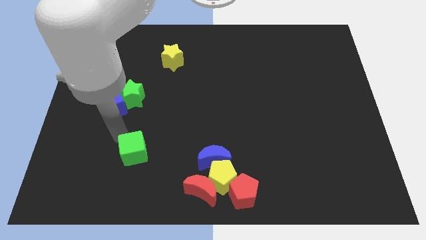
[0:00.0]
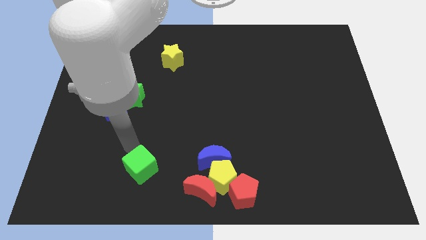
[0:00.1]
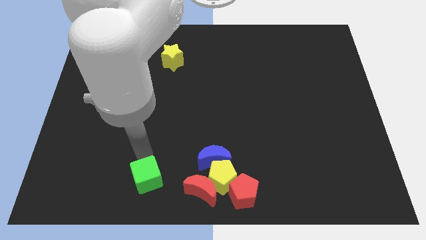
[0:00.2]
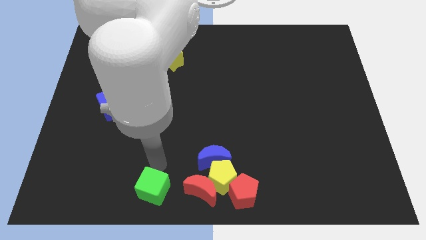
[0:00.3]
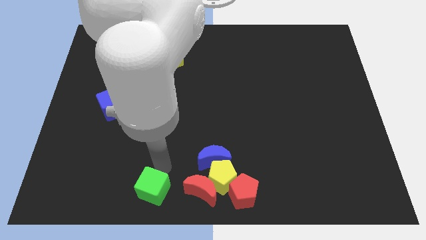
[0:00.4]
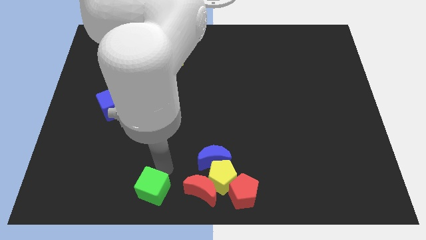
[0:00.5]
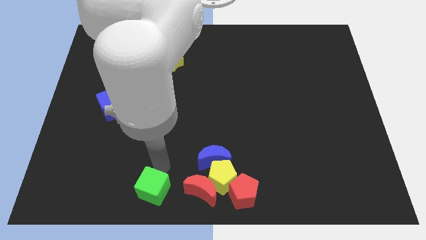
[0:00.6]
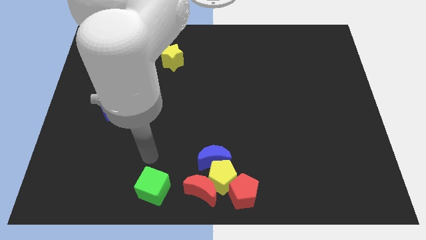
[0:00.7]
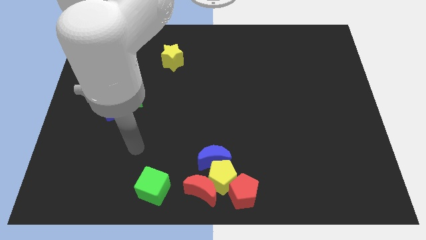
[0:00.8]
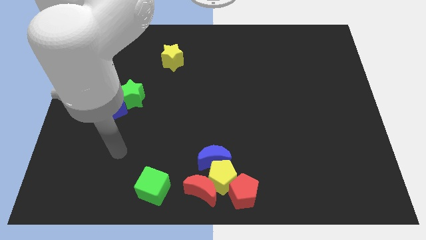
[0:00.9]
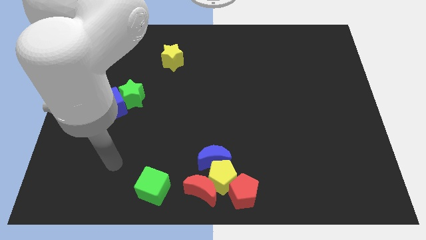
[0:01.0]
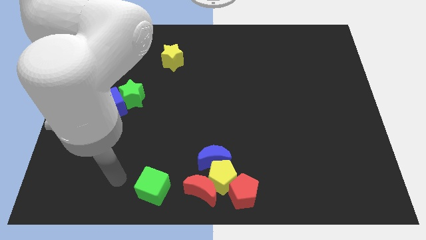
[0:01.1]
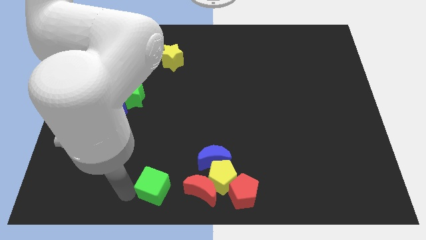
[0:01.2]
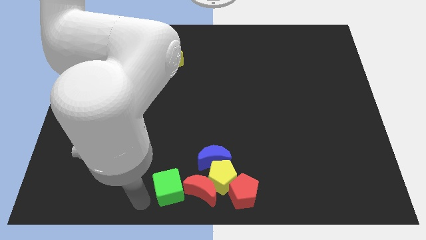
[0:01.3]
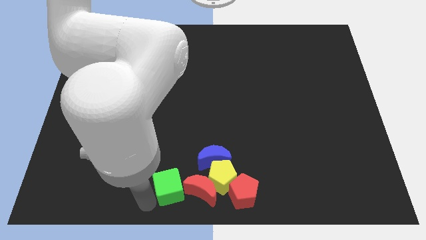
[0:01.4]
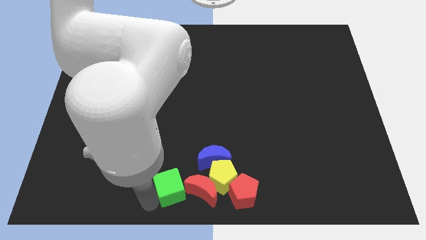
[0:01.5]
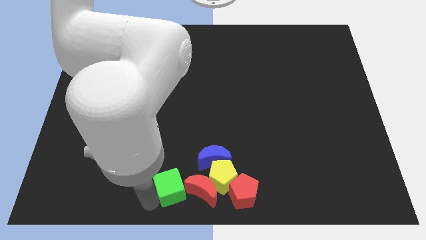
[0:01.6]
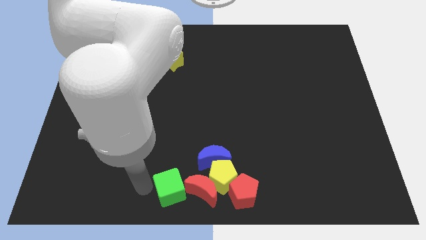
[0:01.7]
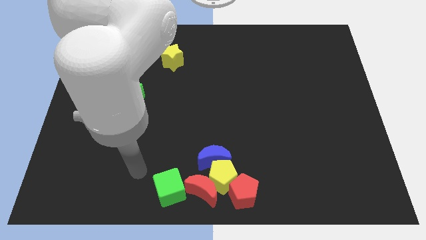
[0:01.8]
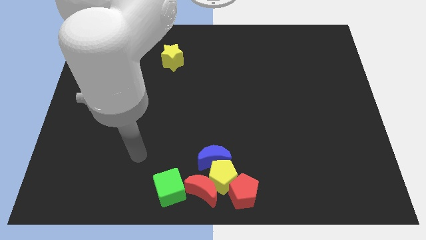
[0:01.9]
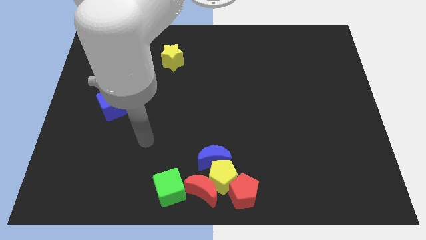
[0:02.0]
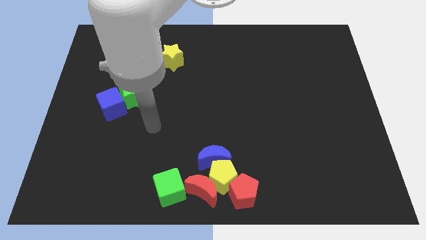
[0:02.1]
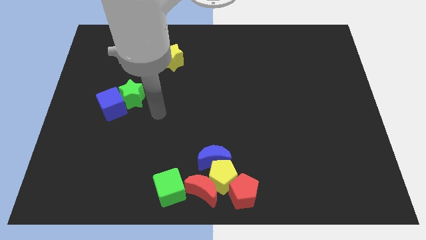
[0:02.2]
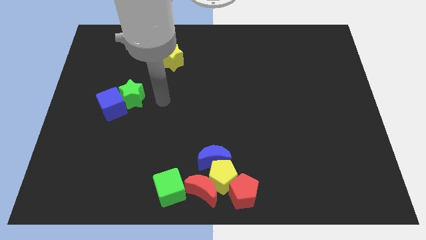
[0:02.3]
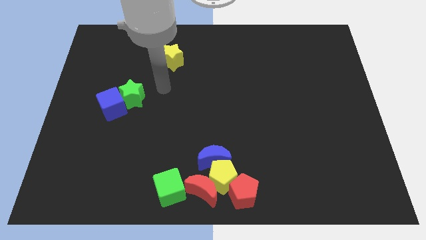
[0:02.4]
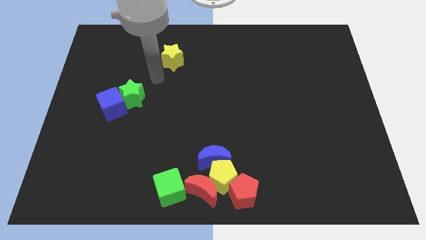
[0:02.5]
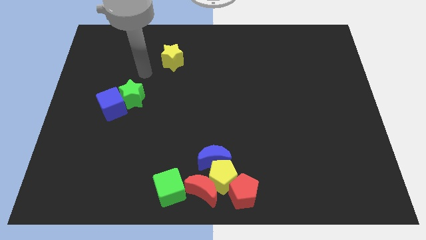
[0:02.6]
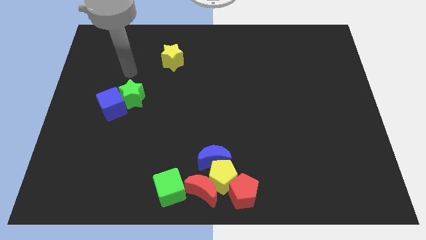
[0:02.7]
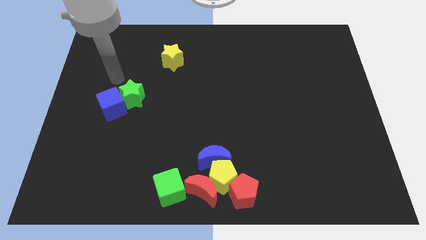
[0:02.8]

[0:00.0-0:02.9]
move green cube left beside the red moon

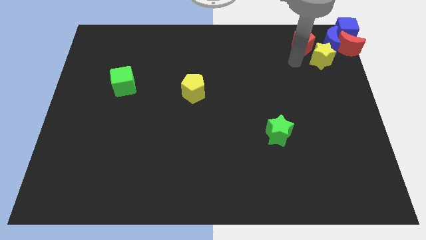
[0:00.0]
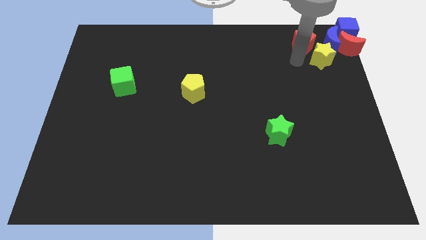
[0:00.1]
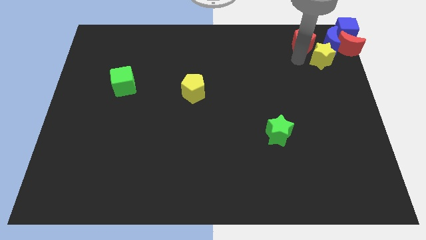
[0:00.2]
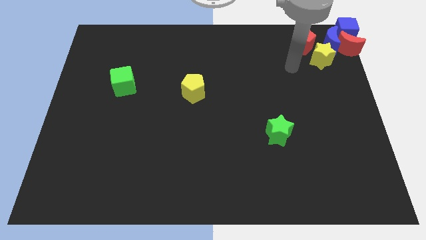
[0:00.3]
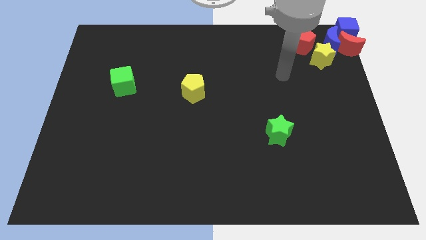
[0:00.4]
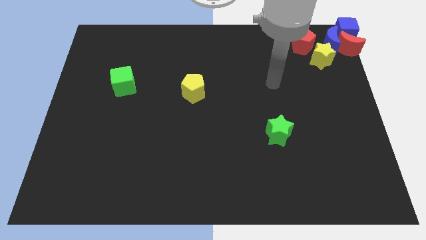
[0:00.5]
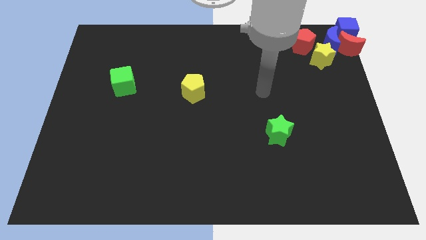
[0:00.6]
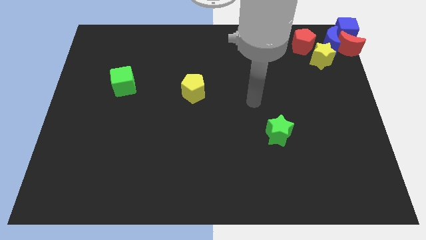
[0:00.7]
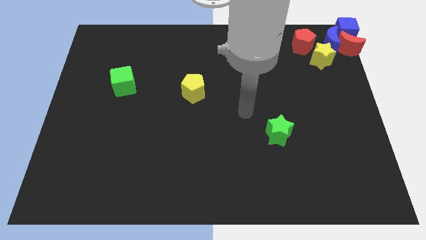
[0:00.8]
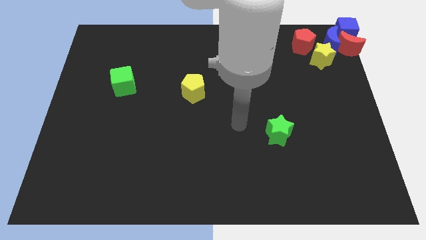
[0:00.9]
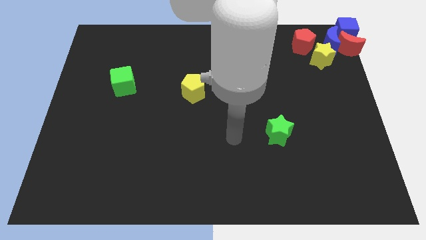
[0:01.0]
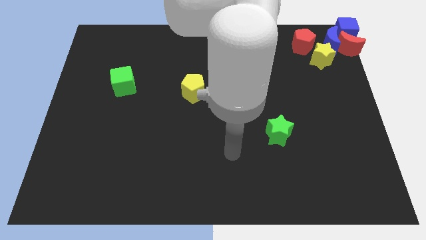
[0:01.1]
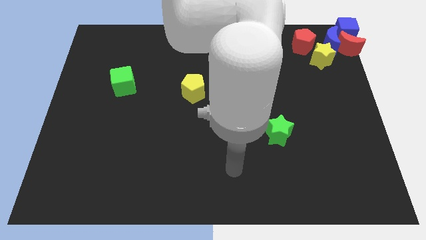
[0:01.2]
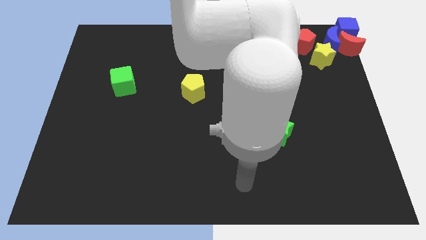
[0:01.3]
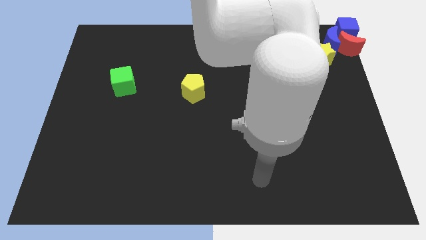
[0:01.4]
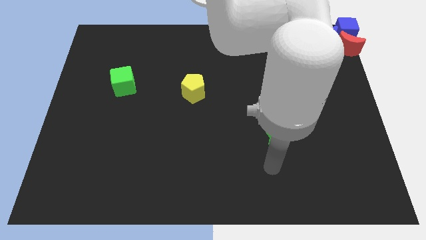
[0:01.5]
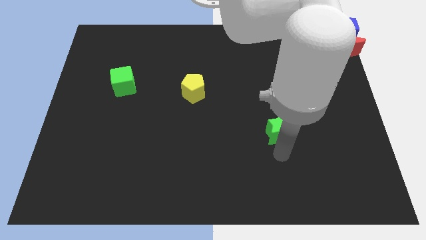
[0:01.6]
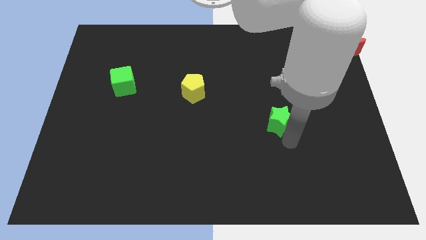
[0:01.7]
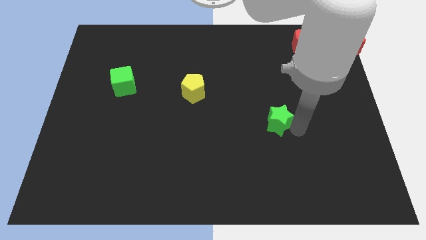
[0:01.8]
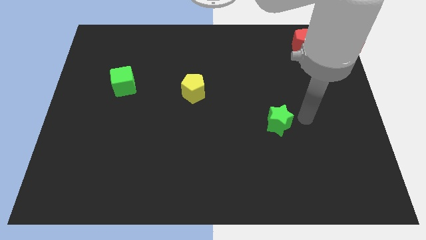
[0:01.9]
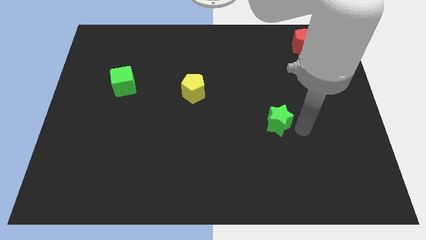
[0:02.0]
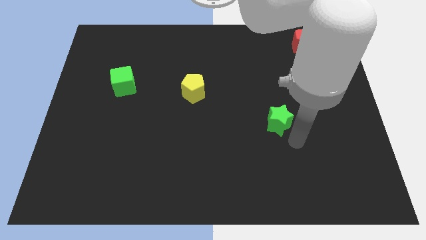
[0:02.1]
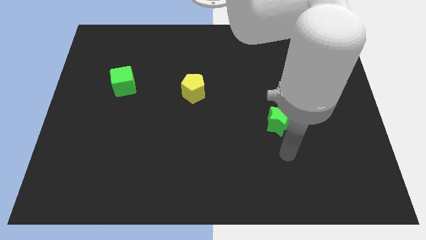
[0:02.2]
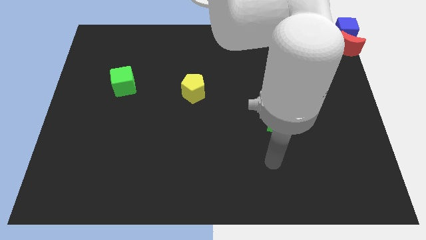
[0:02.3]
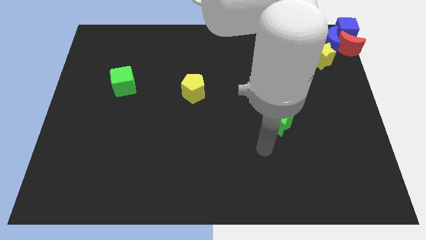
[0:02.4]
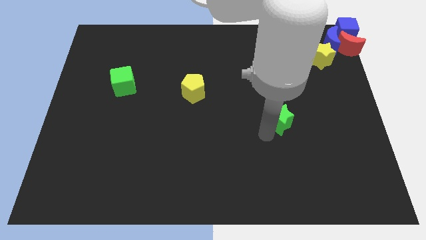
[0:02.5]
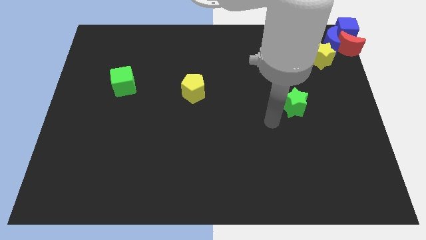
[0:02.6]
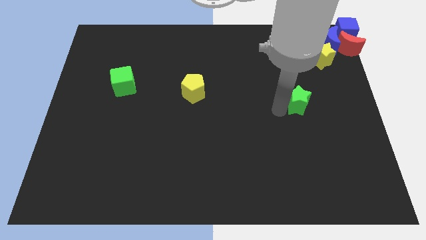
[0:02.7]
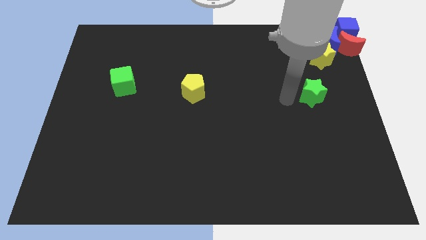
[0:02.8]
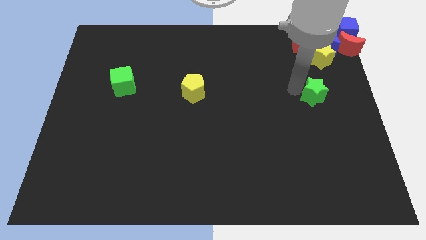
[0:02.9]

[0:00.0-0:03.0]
push the green star to the bottom of the yellow star

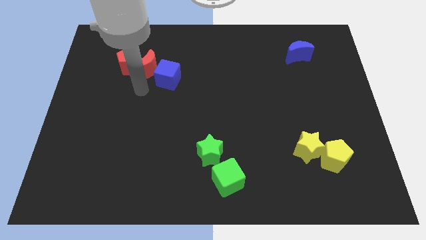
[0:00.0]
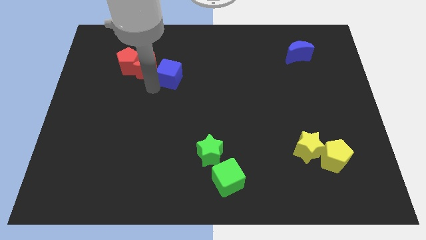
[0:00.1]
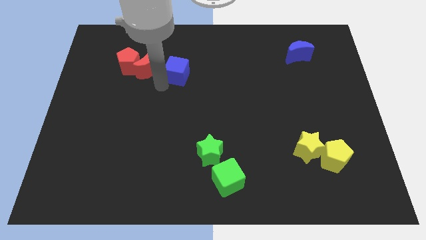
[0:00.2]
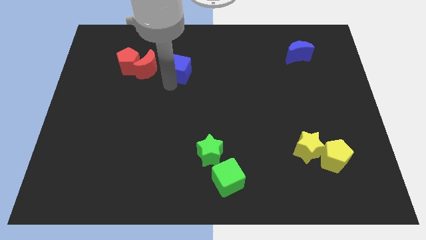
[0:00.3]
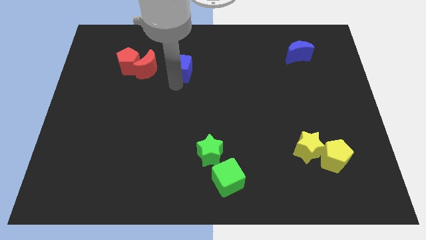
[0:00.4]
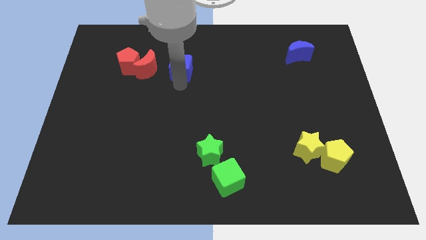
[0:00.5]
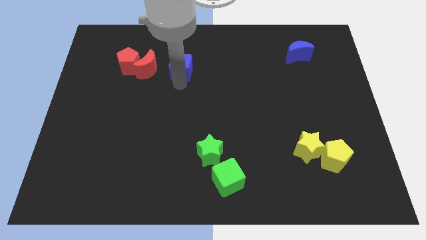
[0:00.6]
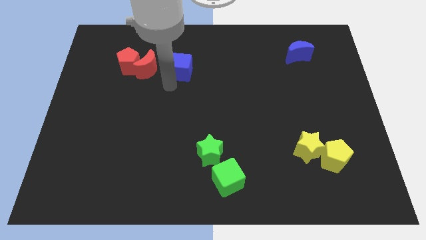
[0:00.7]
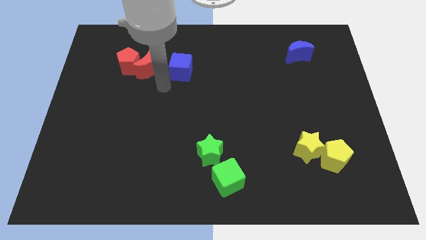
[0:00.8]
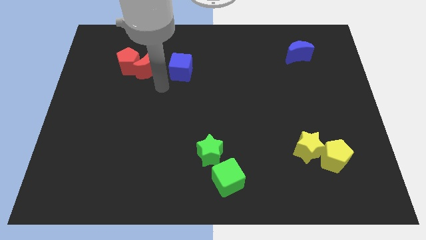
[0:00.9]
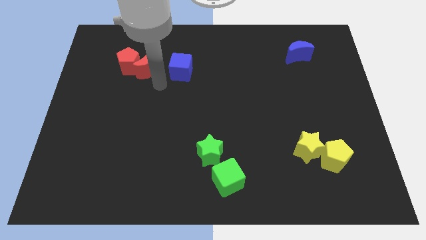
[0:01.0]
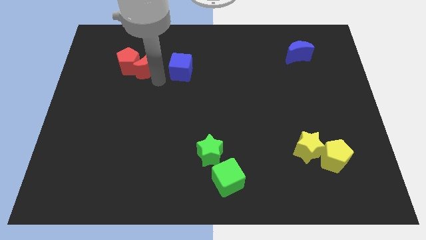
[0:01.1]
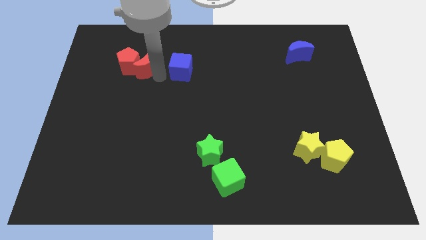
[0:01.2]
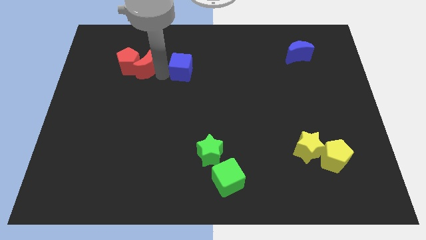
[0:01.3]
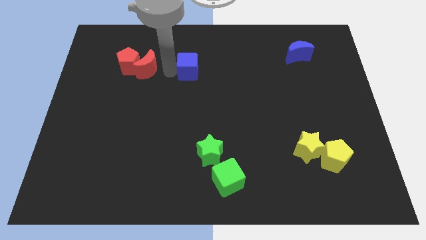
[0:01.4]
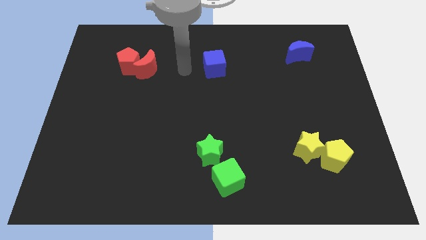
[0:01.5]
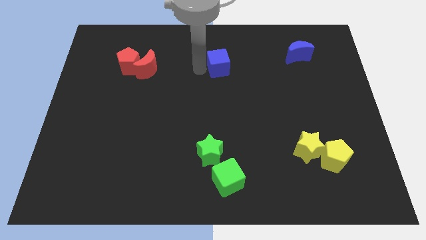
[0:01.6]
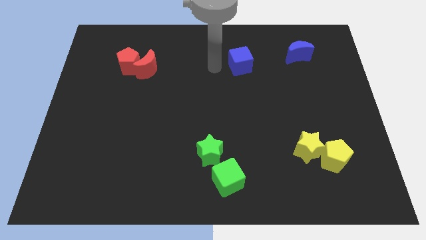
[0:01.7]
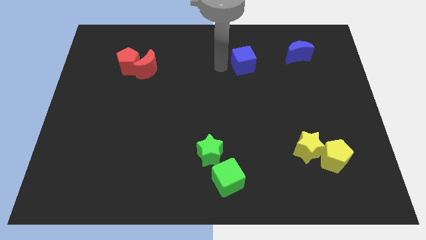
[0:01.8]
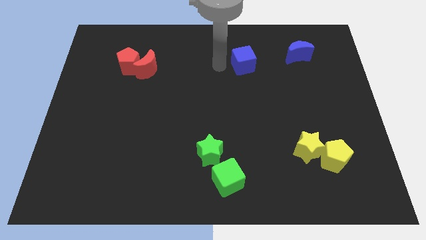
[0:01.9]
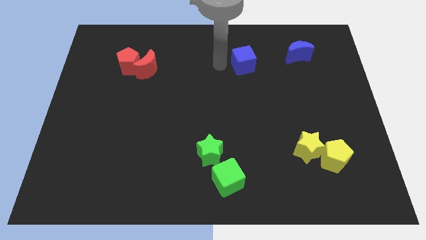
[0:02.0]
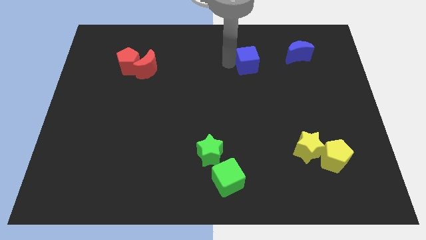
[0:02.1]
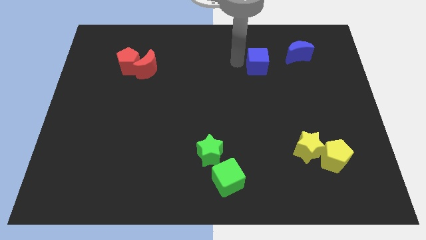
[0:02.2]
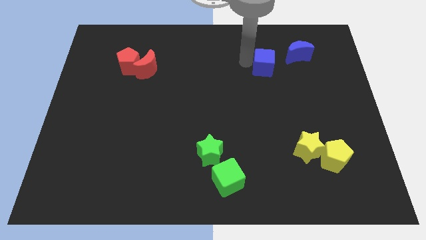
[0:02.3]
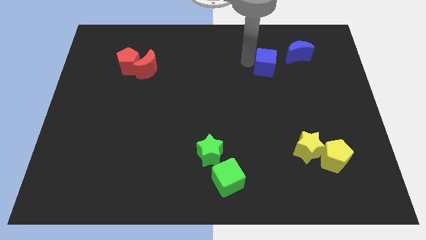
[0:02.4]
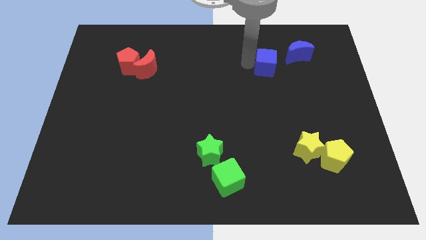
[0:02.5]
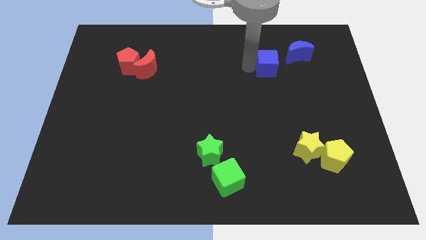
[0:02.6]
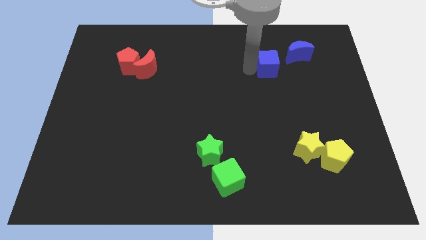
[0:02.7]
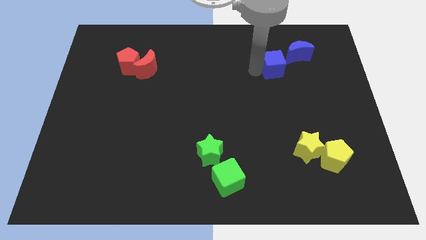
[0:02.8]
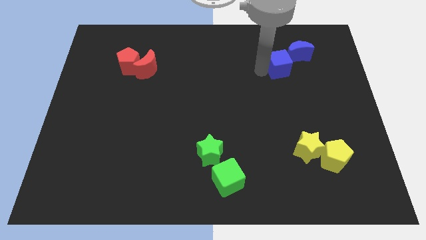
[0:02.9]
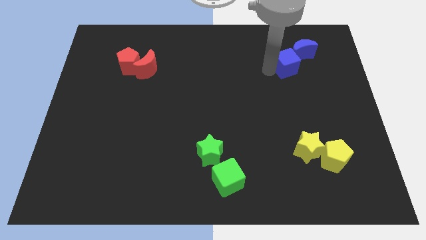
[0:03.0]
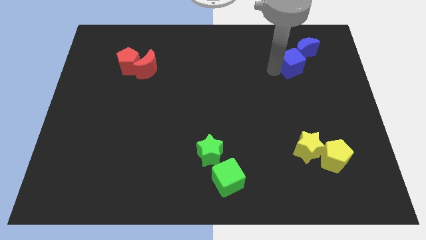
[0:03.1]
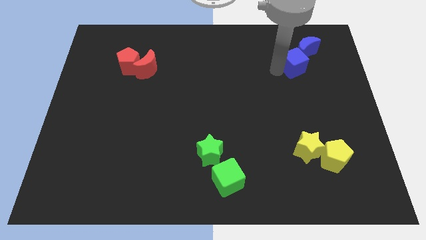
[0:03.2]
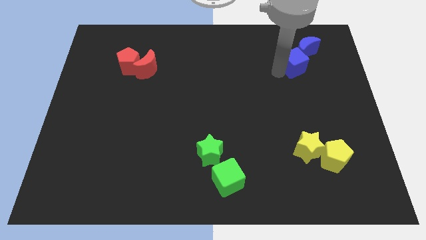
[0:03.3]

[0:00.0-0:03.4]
push the blue cube into blue crescent
